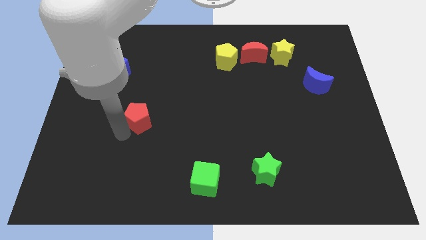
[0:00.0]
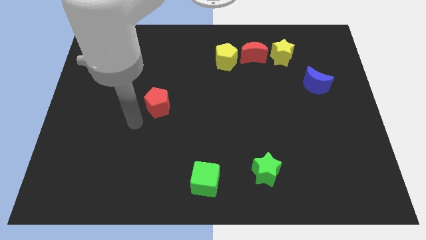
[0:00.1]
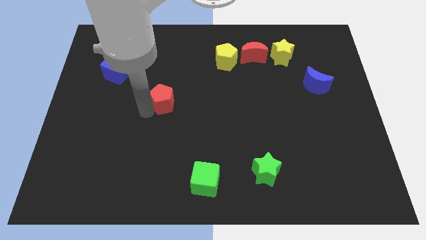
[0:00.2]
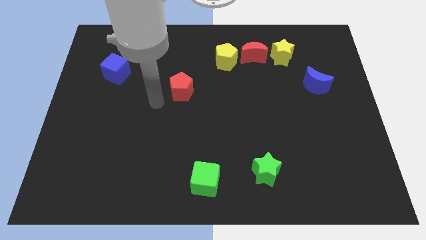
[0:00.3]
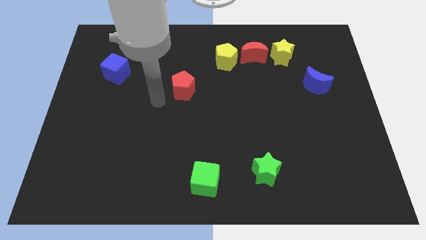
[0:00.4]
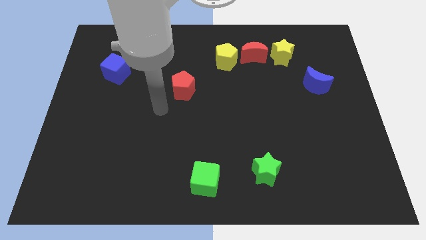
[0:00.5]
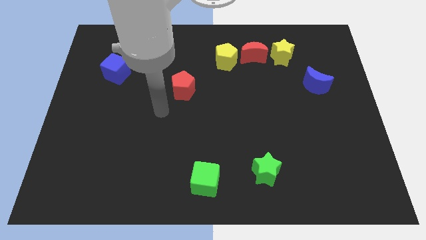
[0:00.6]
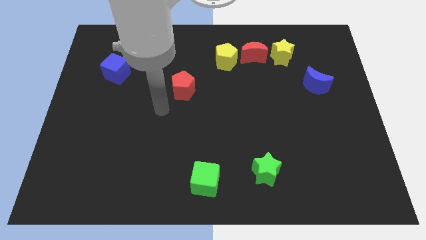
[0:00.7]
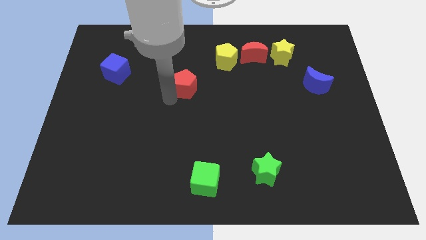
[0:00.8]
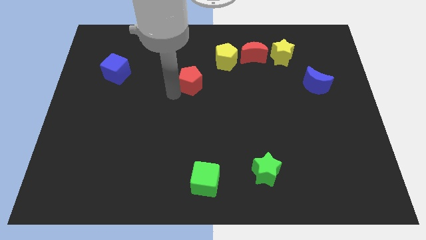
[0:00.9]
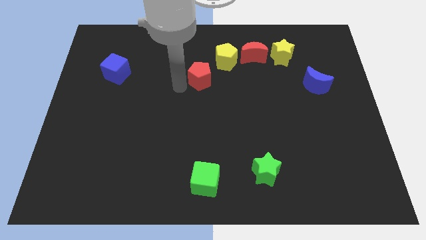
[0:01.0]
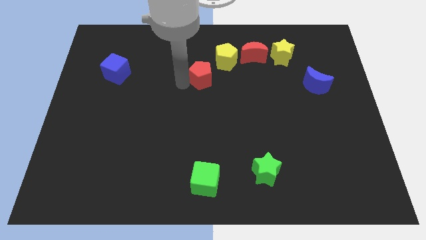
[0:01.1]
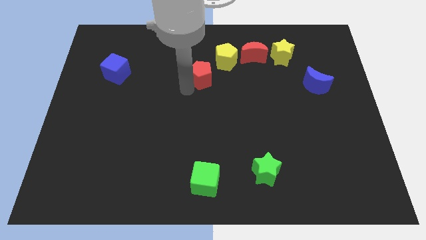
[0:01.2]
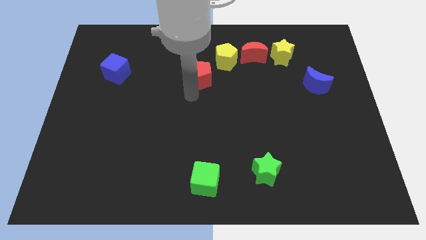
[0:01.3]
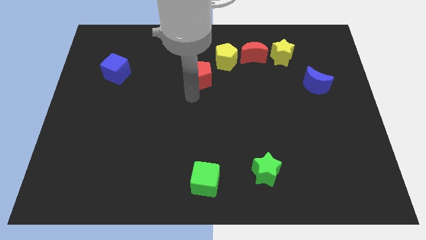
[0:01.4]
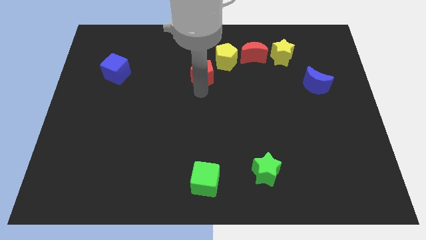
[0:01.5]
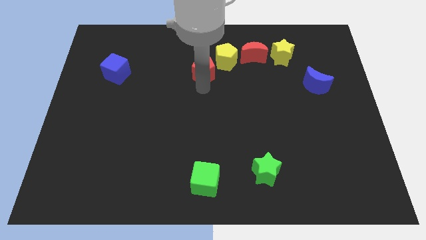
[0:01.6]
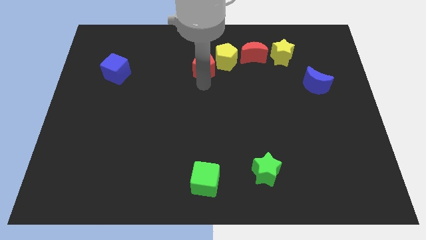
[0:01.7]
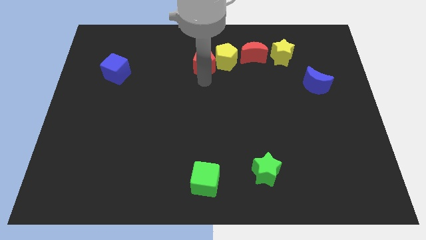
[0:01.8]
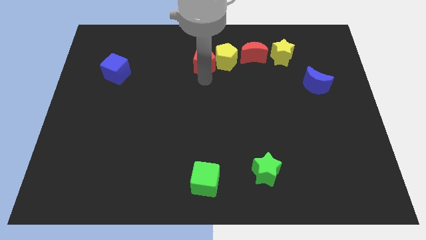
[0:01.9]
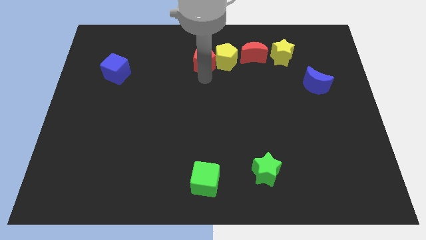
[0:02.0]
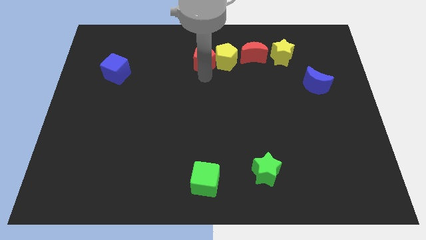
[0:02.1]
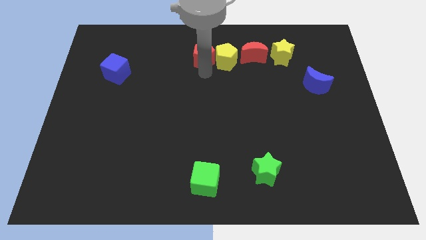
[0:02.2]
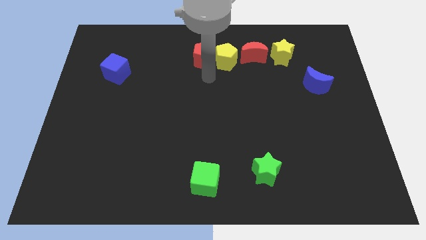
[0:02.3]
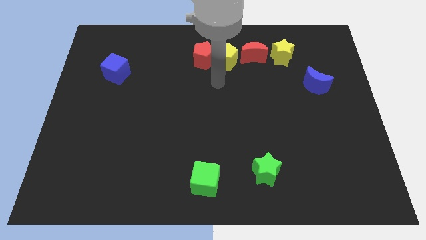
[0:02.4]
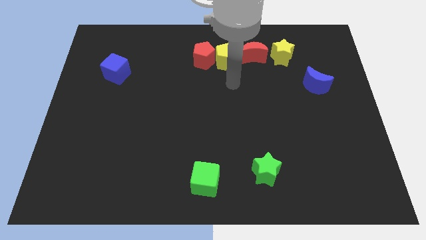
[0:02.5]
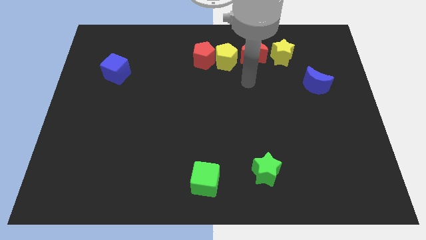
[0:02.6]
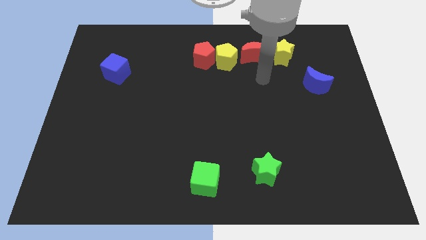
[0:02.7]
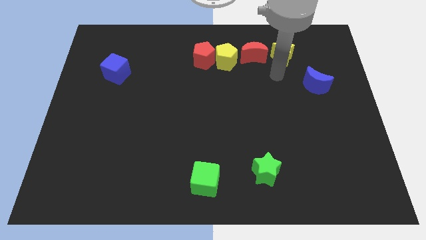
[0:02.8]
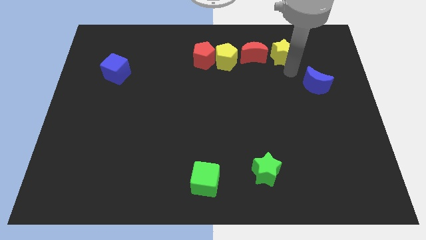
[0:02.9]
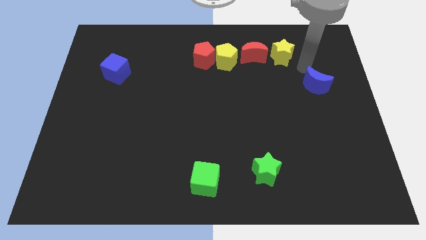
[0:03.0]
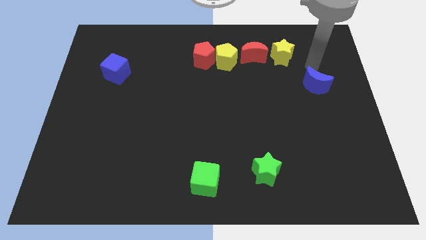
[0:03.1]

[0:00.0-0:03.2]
move the red pentagon left to the yellow pentagon

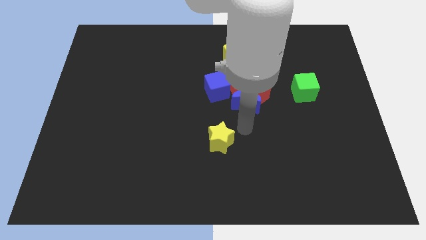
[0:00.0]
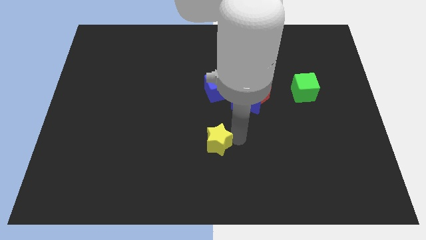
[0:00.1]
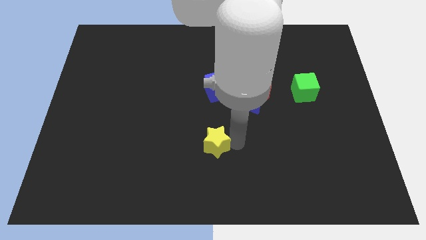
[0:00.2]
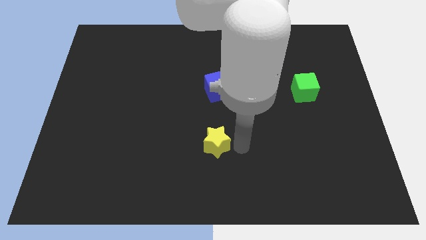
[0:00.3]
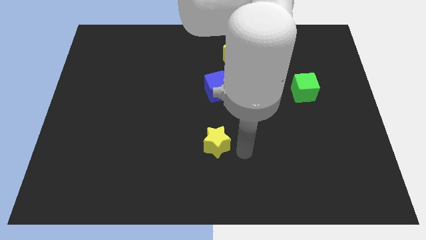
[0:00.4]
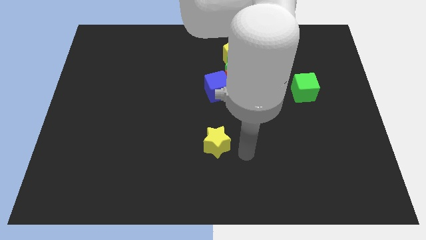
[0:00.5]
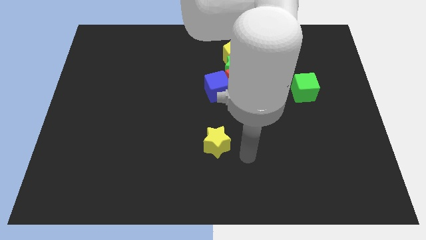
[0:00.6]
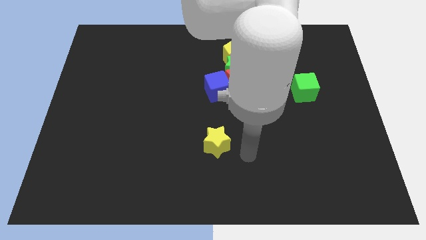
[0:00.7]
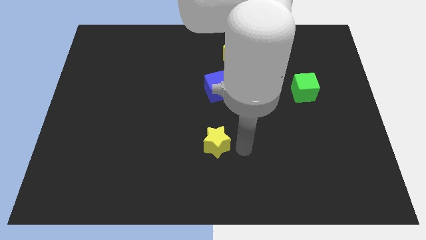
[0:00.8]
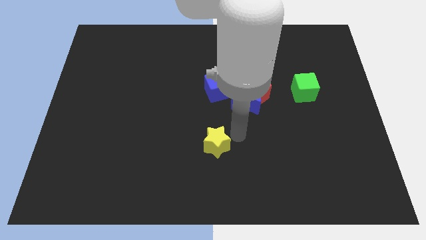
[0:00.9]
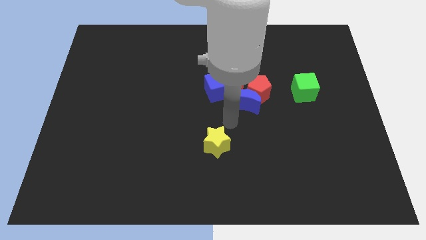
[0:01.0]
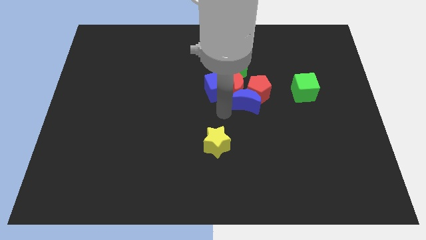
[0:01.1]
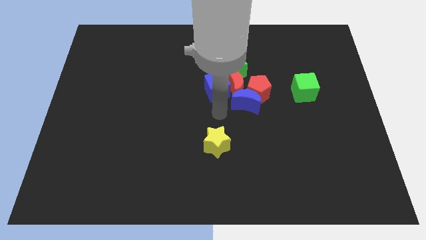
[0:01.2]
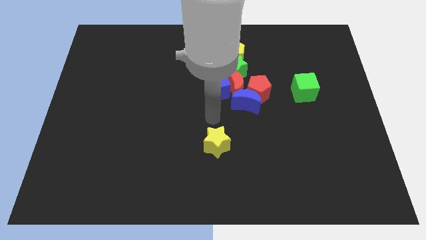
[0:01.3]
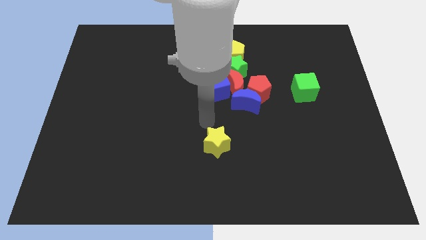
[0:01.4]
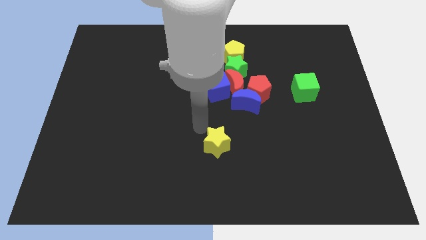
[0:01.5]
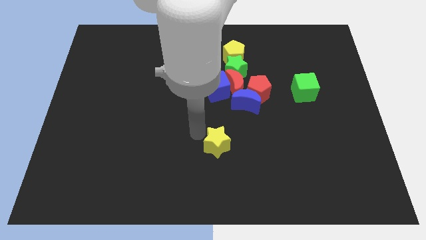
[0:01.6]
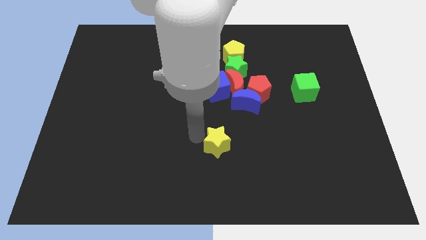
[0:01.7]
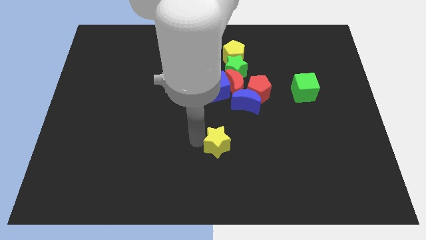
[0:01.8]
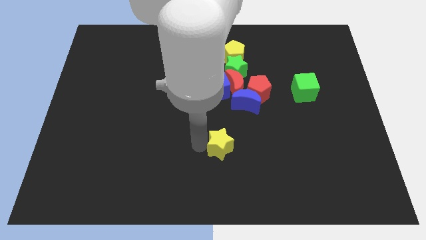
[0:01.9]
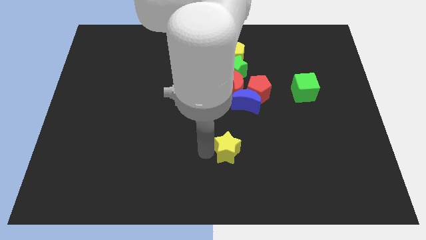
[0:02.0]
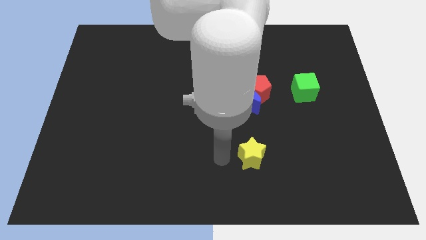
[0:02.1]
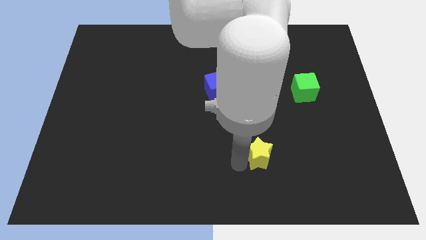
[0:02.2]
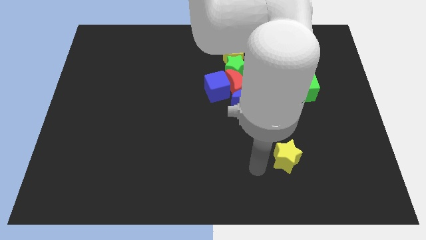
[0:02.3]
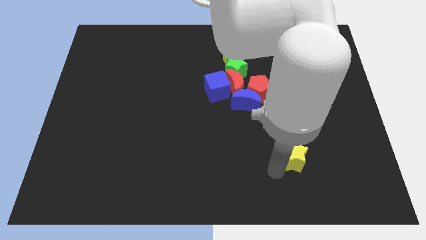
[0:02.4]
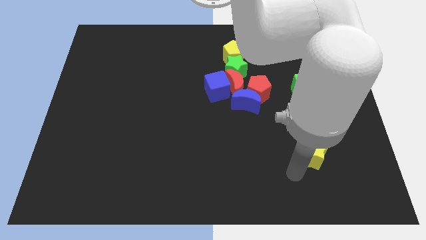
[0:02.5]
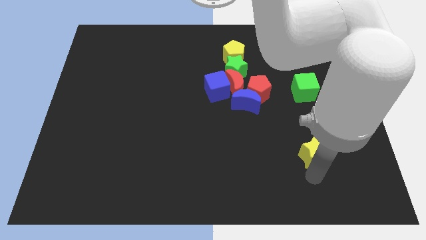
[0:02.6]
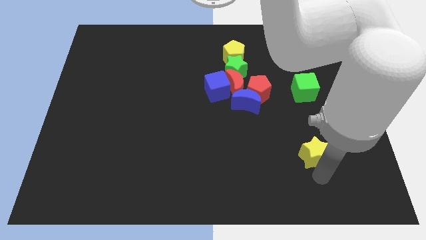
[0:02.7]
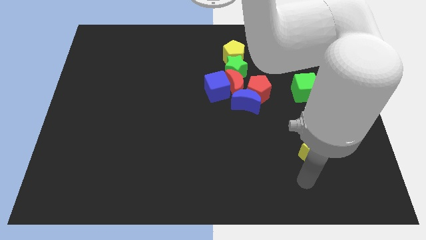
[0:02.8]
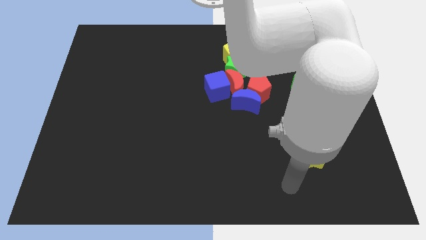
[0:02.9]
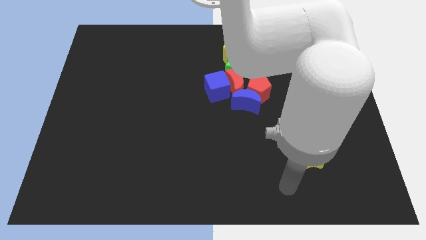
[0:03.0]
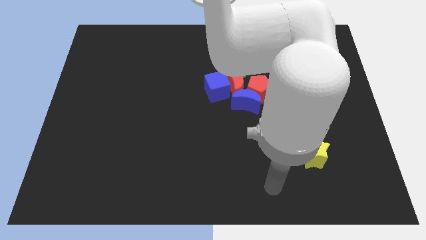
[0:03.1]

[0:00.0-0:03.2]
place the yellow star to the bottom of the green cube

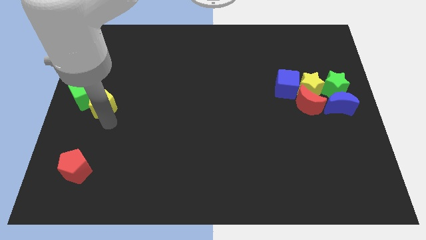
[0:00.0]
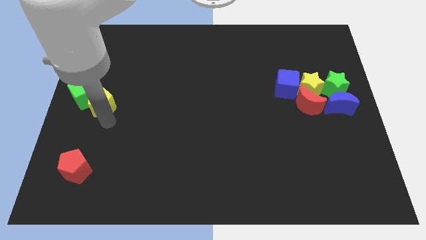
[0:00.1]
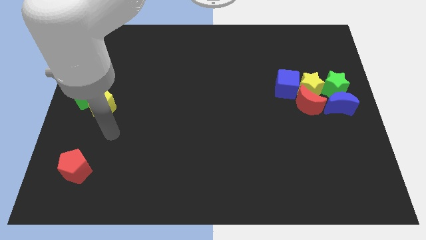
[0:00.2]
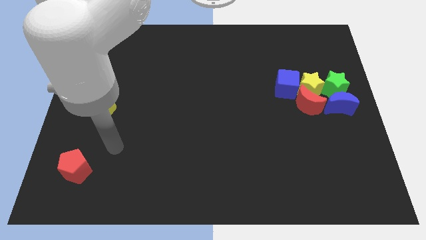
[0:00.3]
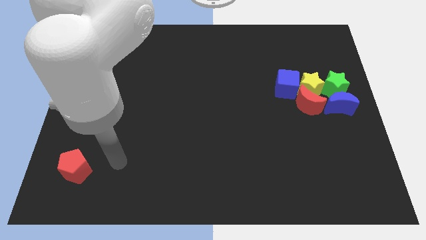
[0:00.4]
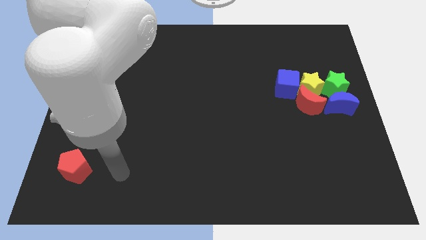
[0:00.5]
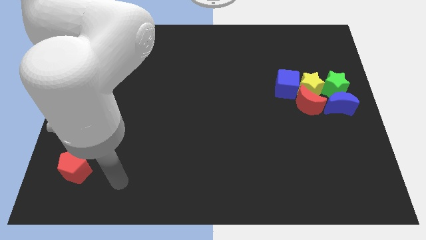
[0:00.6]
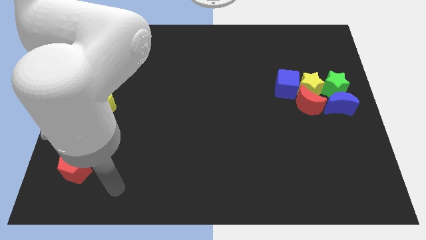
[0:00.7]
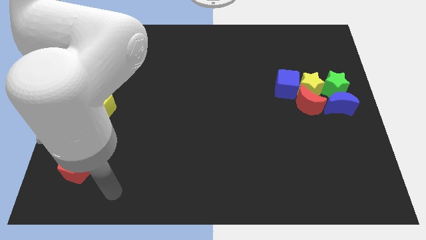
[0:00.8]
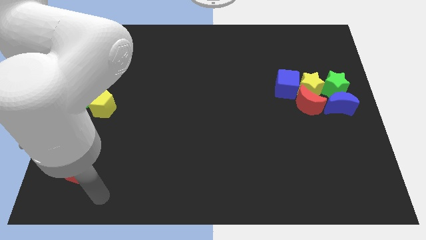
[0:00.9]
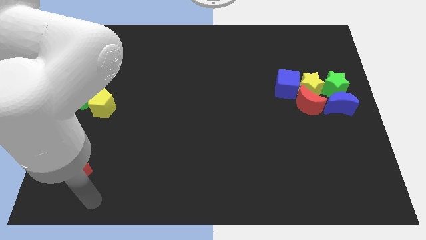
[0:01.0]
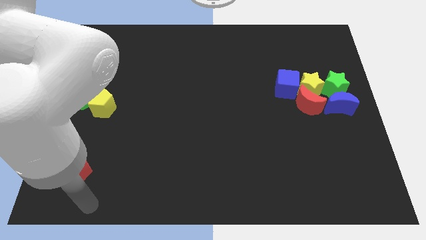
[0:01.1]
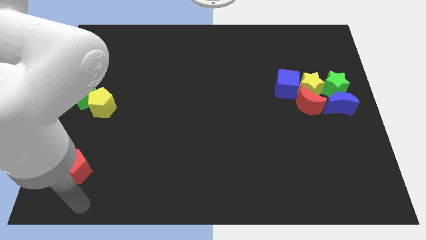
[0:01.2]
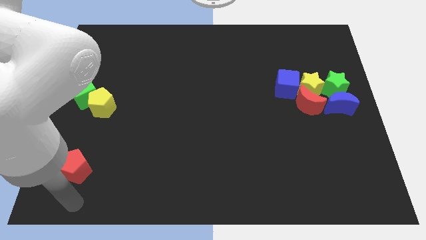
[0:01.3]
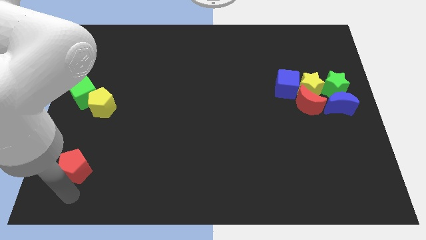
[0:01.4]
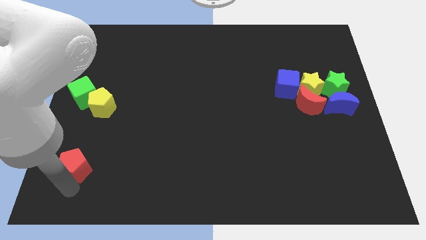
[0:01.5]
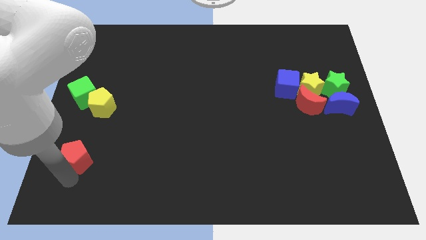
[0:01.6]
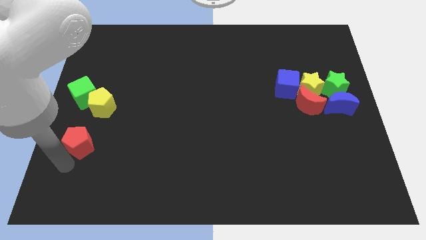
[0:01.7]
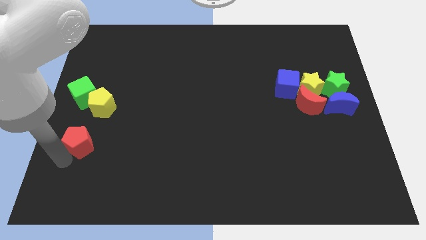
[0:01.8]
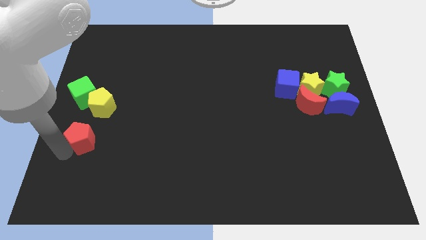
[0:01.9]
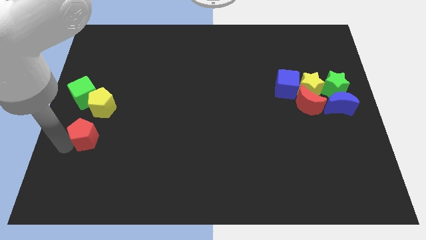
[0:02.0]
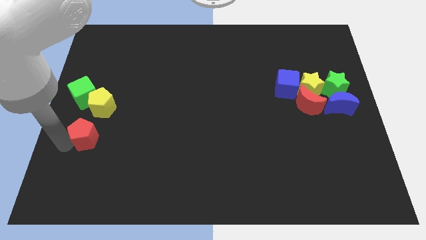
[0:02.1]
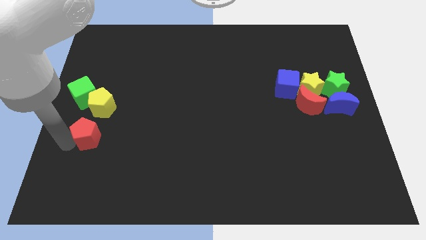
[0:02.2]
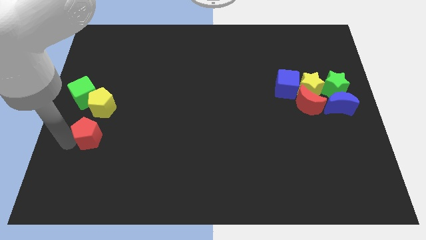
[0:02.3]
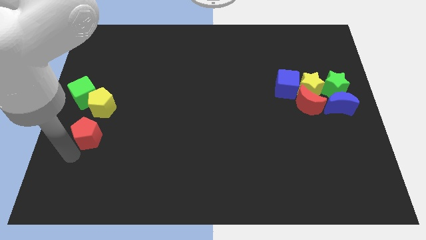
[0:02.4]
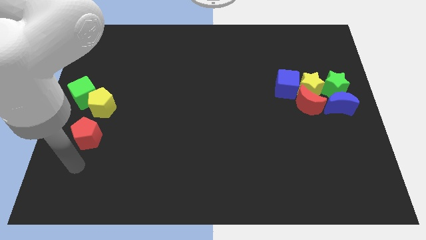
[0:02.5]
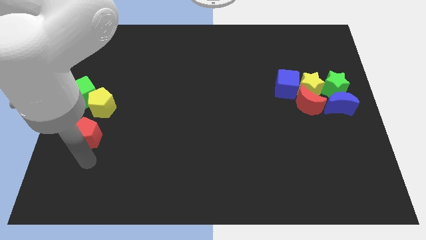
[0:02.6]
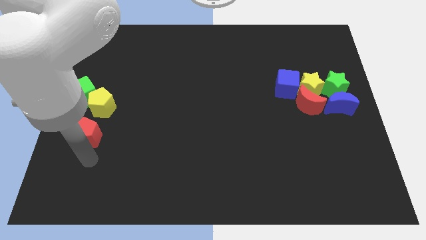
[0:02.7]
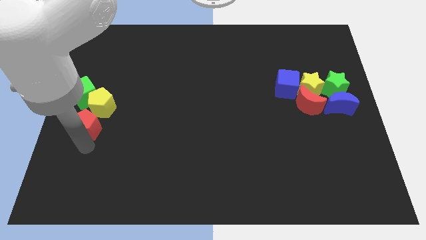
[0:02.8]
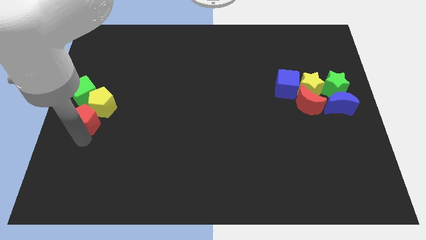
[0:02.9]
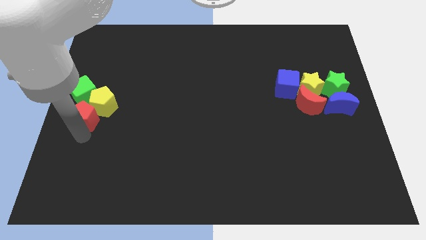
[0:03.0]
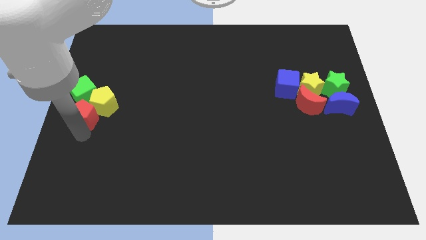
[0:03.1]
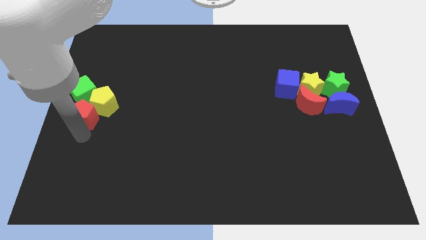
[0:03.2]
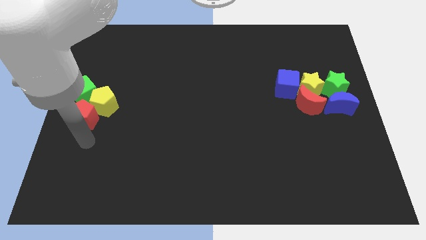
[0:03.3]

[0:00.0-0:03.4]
move the red pentagon into the group of blocks
